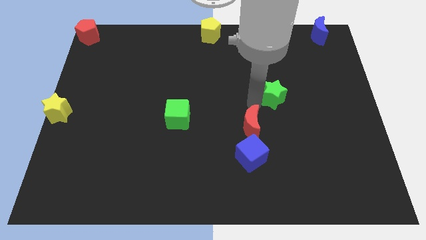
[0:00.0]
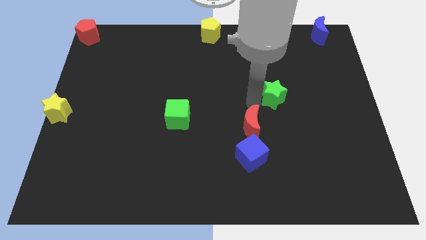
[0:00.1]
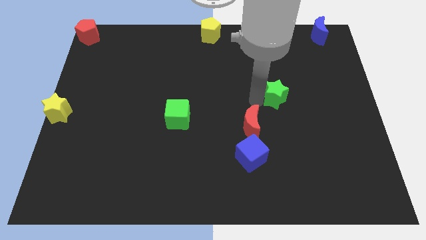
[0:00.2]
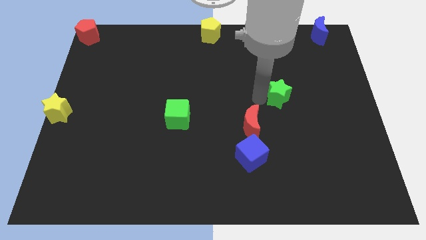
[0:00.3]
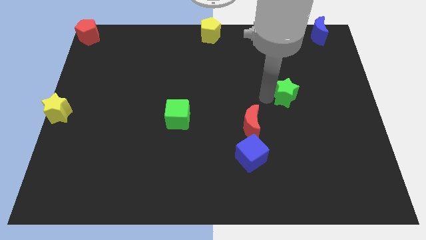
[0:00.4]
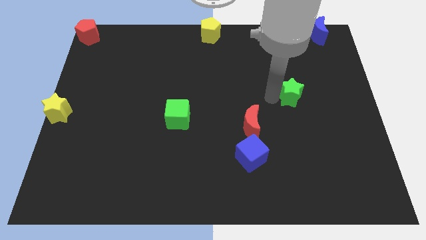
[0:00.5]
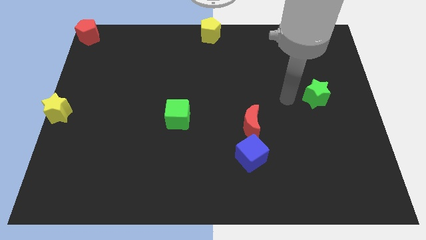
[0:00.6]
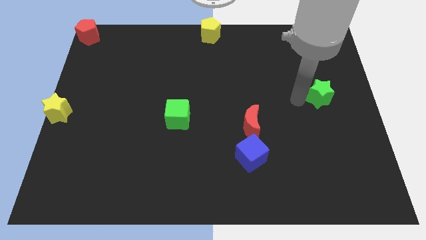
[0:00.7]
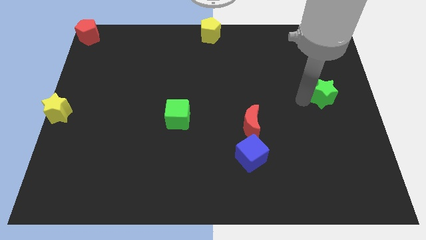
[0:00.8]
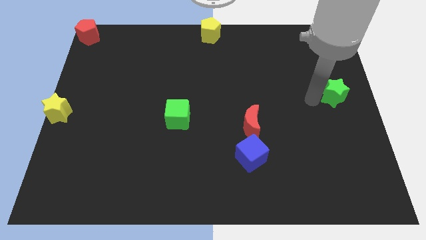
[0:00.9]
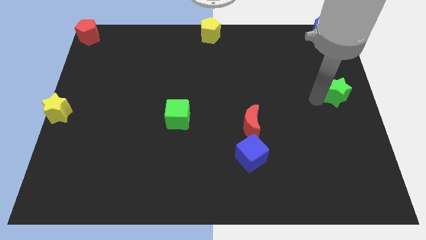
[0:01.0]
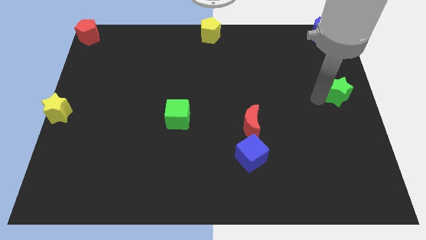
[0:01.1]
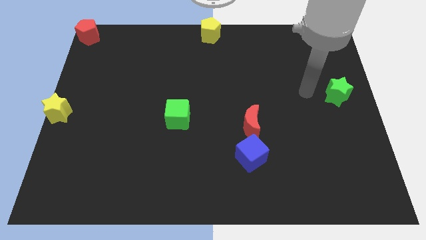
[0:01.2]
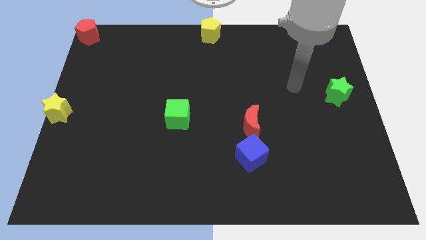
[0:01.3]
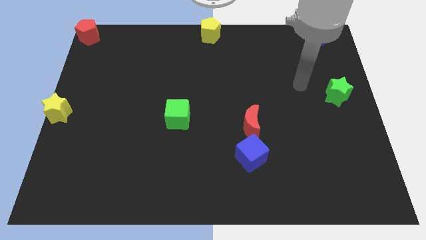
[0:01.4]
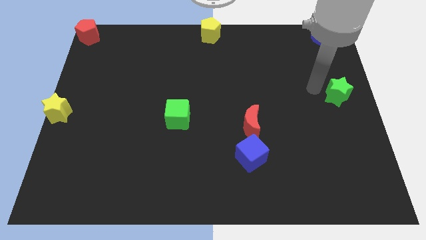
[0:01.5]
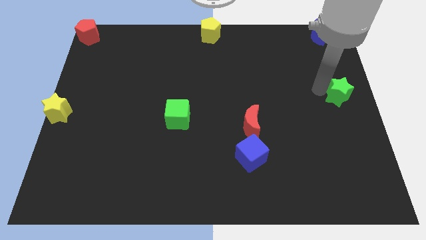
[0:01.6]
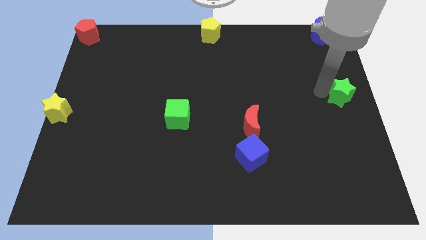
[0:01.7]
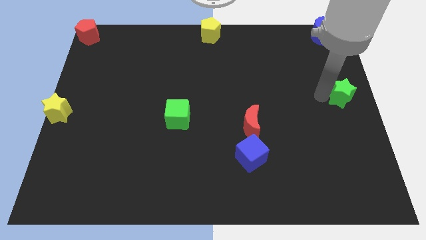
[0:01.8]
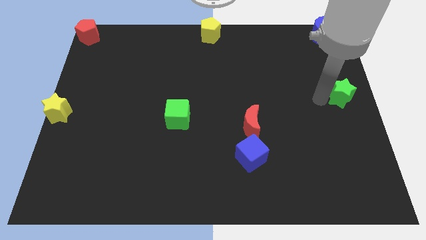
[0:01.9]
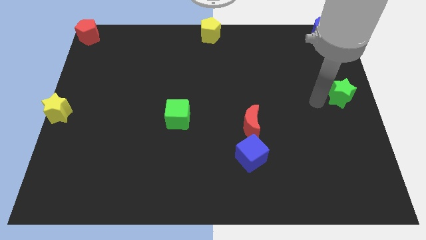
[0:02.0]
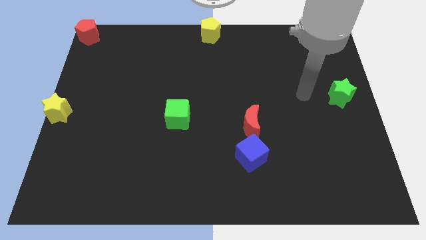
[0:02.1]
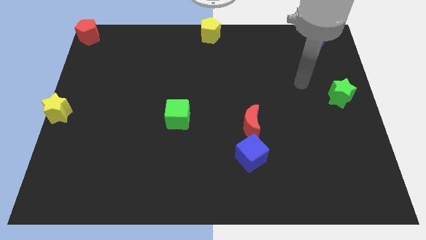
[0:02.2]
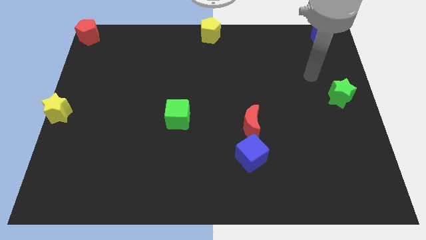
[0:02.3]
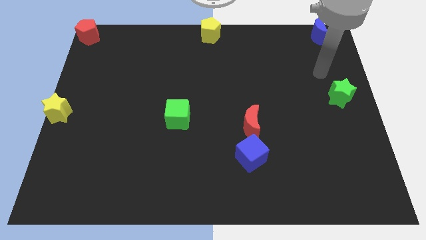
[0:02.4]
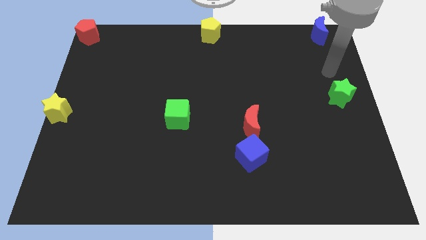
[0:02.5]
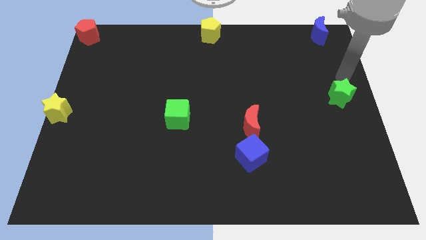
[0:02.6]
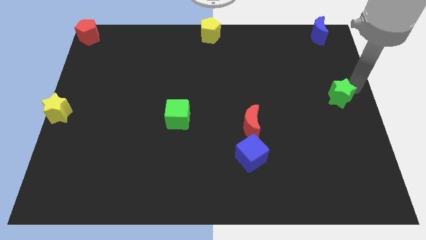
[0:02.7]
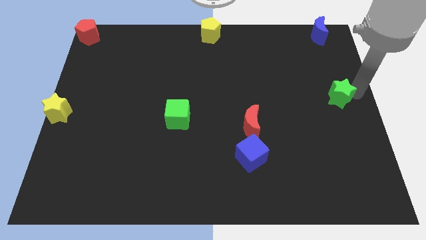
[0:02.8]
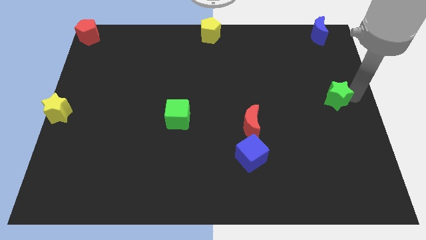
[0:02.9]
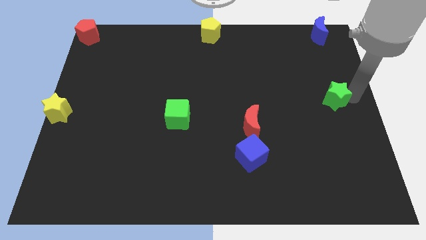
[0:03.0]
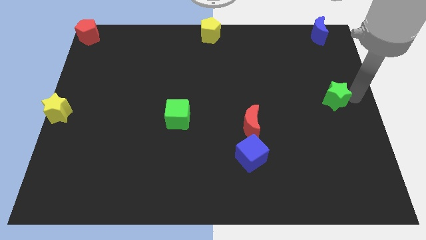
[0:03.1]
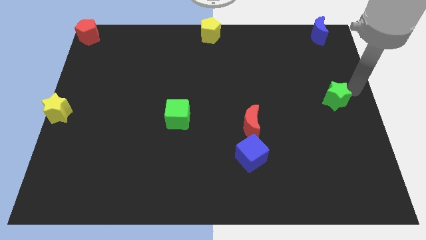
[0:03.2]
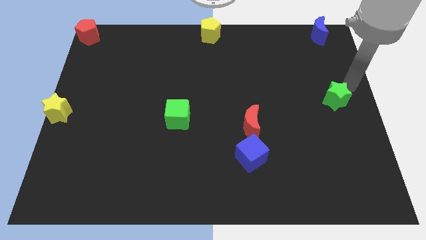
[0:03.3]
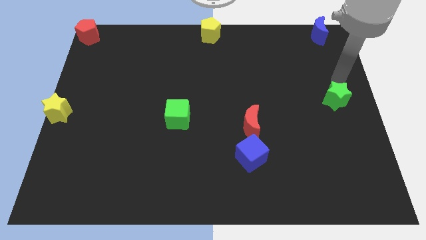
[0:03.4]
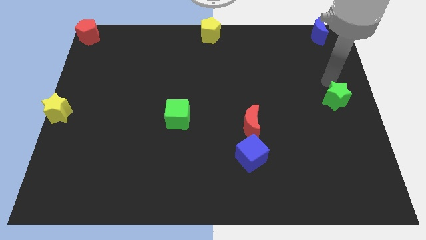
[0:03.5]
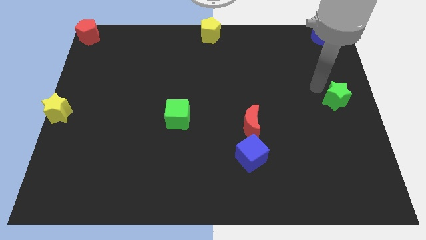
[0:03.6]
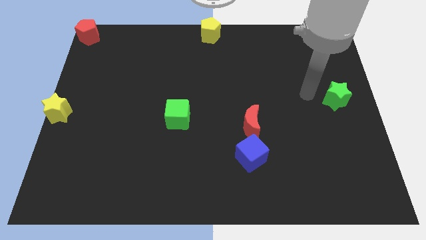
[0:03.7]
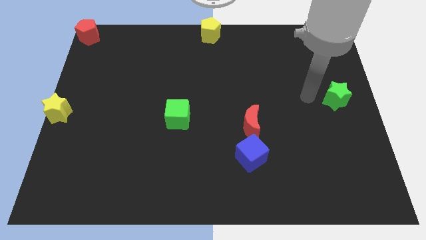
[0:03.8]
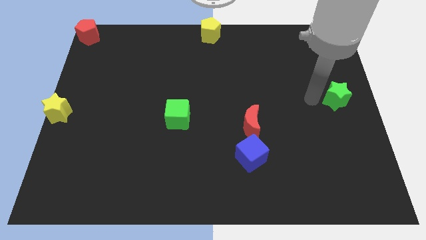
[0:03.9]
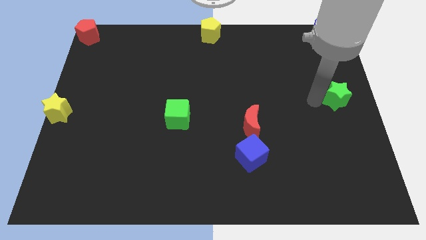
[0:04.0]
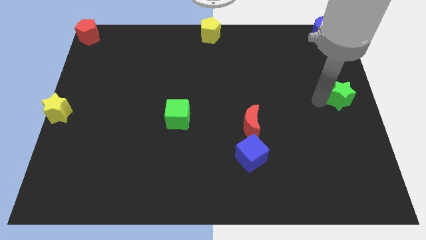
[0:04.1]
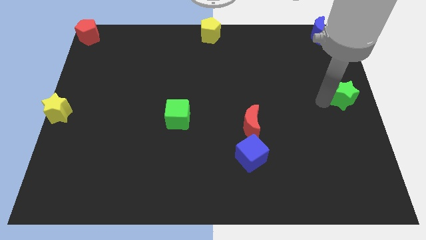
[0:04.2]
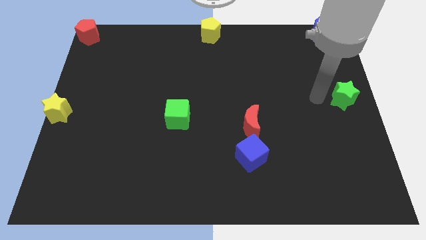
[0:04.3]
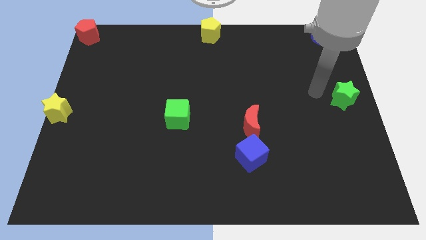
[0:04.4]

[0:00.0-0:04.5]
push the green star to the center right

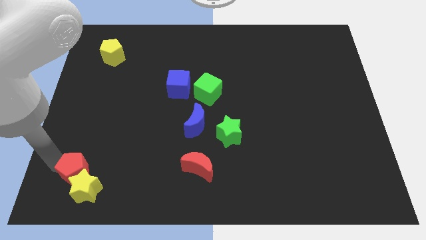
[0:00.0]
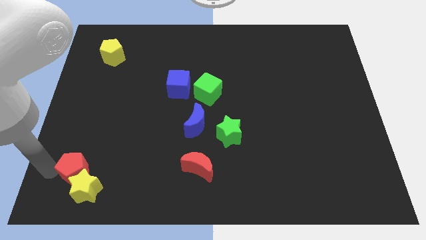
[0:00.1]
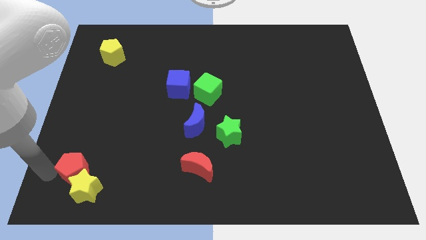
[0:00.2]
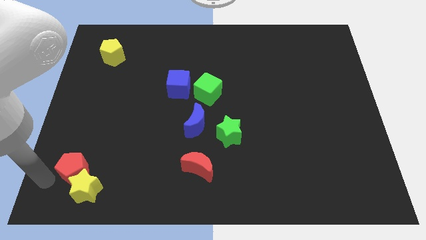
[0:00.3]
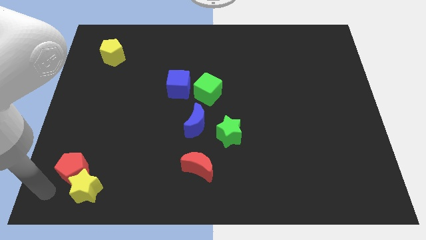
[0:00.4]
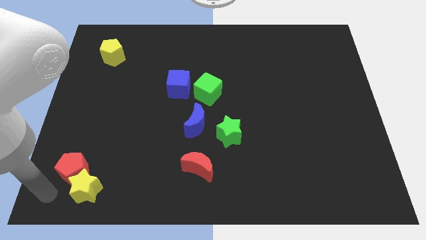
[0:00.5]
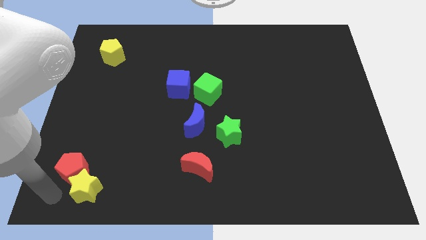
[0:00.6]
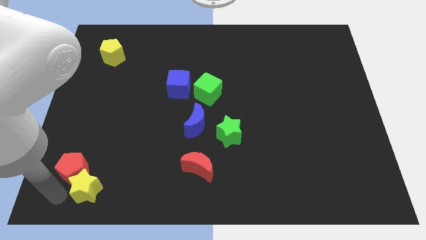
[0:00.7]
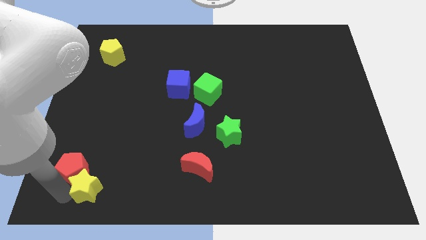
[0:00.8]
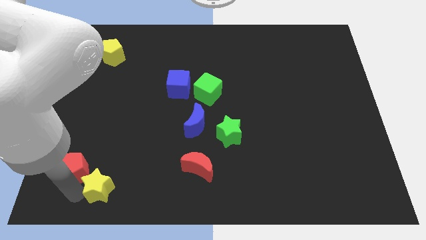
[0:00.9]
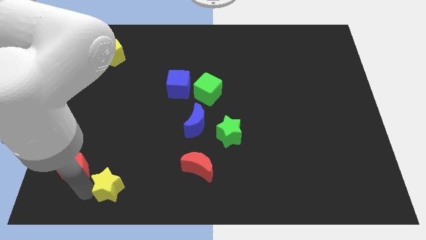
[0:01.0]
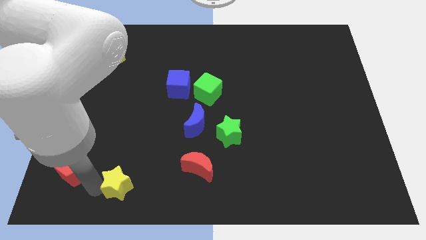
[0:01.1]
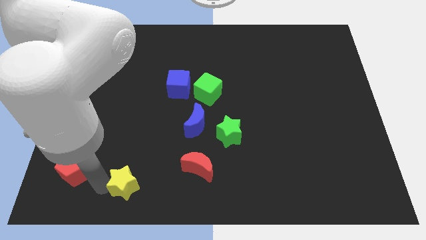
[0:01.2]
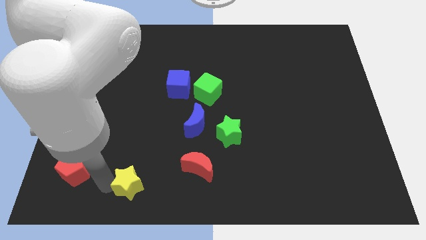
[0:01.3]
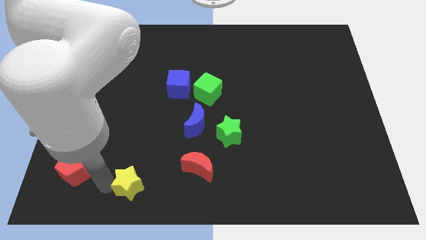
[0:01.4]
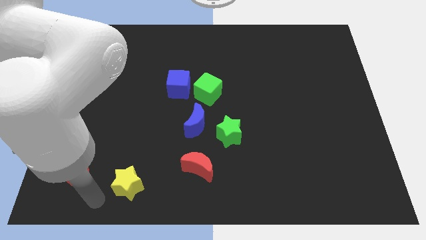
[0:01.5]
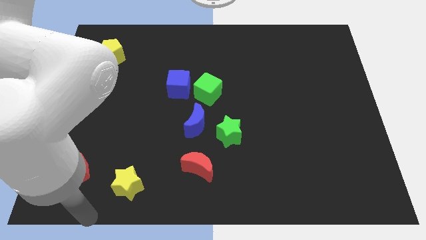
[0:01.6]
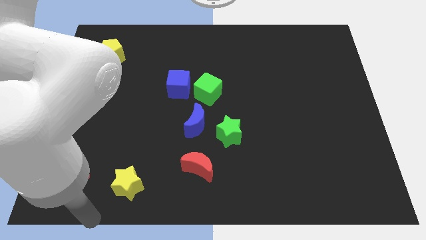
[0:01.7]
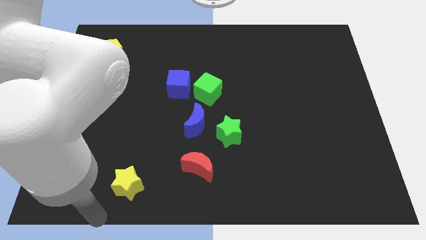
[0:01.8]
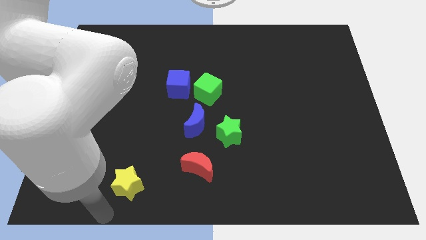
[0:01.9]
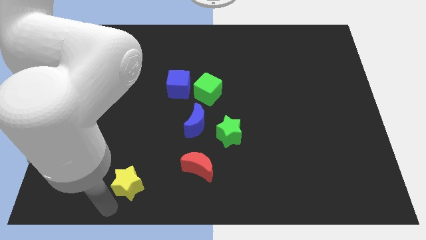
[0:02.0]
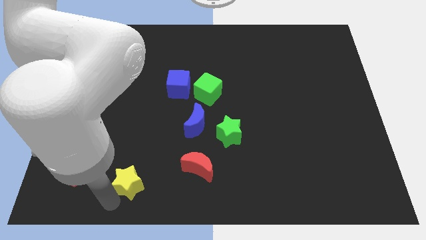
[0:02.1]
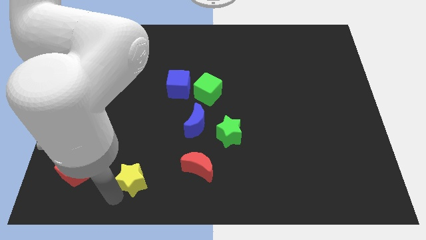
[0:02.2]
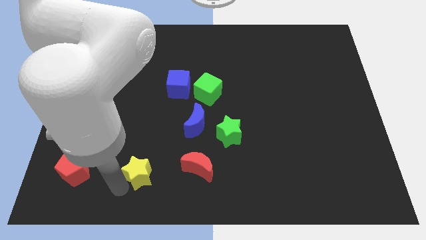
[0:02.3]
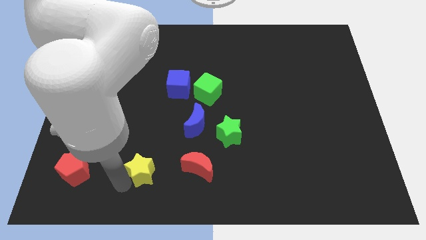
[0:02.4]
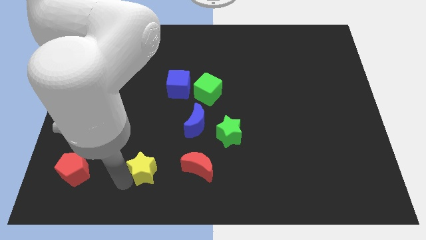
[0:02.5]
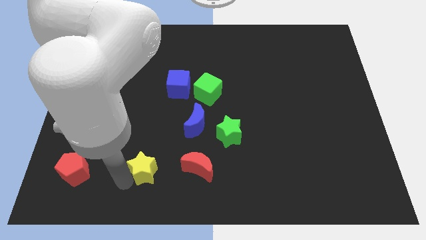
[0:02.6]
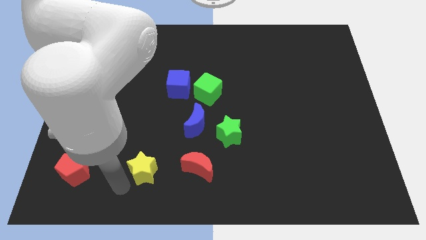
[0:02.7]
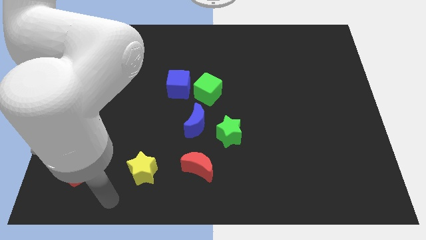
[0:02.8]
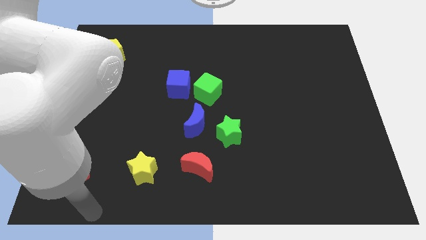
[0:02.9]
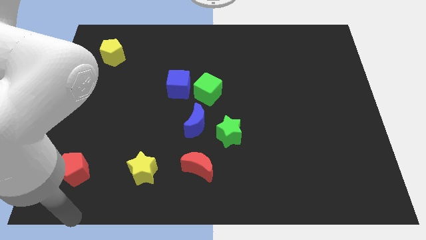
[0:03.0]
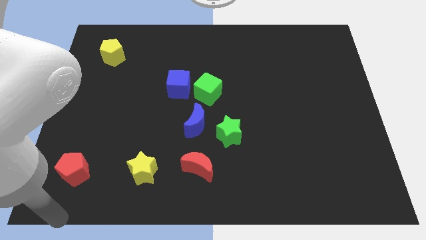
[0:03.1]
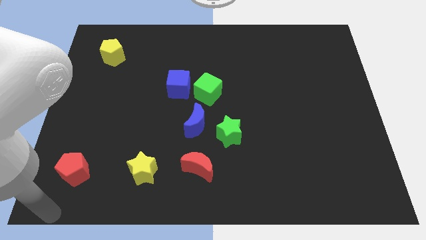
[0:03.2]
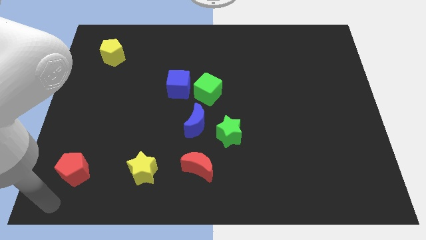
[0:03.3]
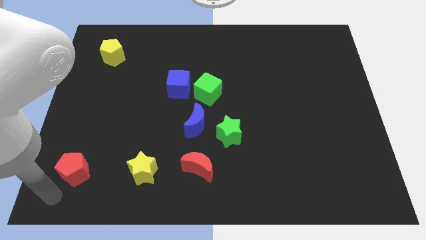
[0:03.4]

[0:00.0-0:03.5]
move the yellow star in between the red crescent and red pentagon

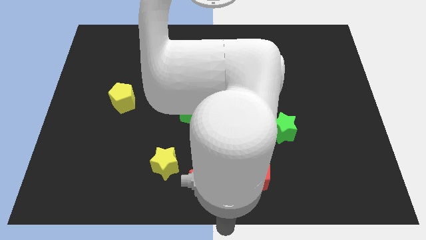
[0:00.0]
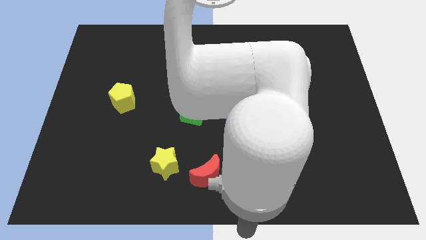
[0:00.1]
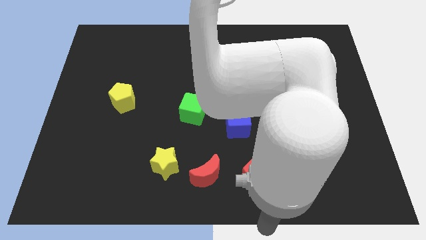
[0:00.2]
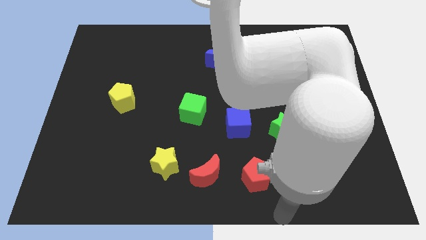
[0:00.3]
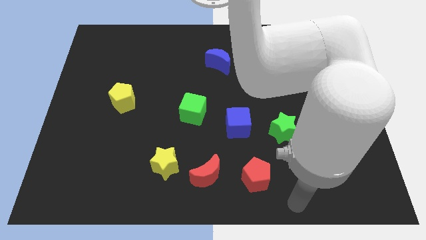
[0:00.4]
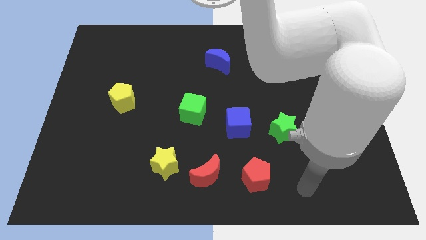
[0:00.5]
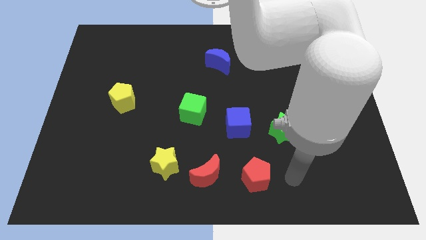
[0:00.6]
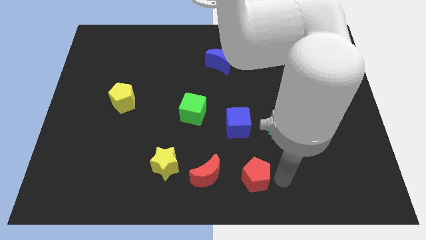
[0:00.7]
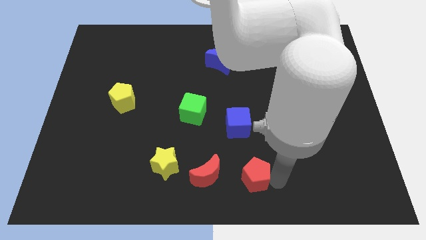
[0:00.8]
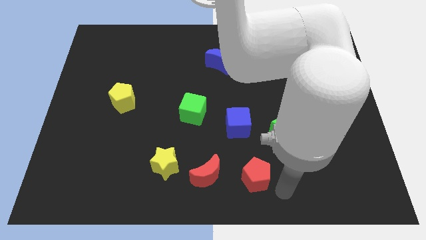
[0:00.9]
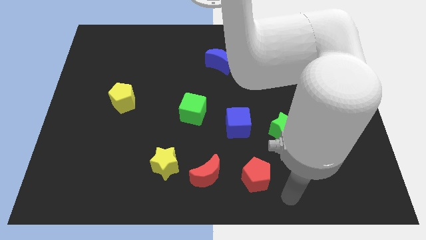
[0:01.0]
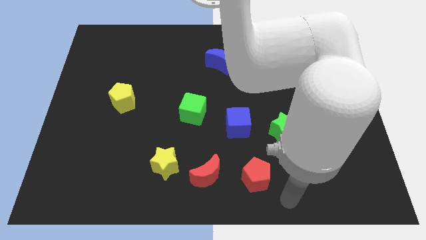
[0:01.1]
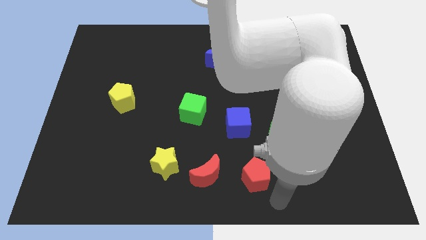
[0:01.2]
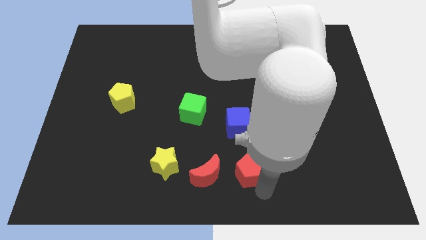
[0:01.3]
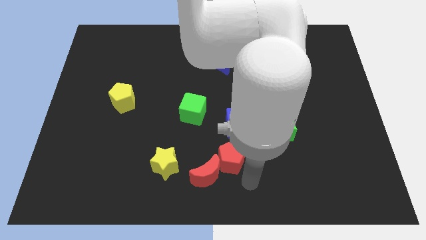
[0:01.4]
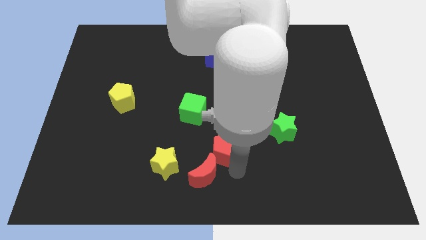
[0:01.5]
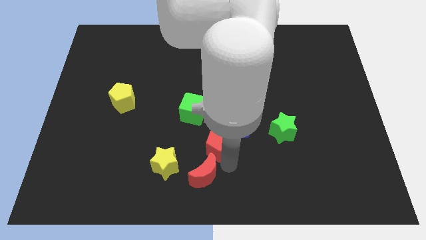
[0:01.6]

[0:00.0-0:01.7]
push the red pentagon into the red moon
